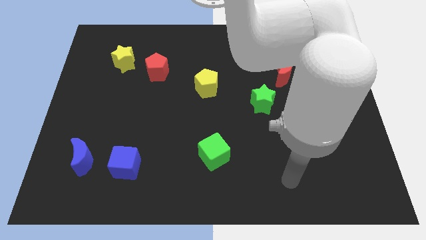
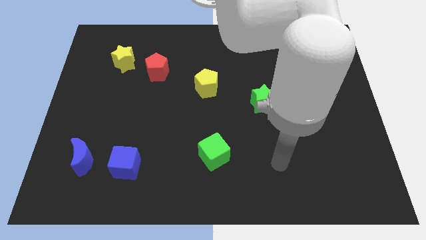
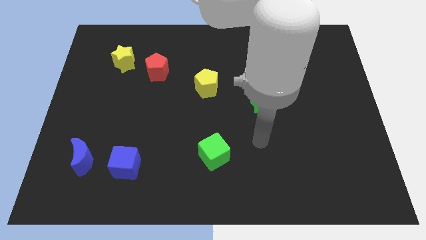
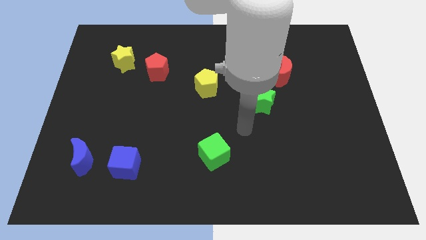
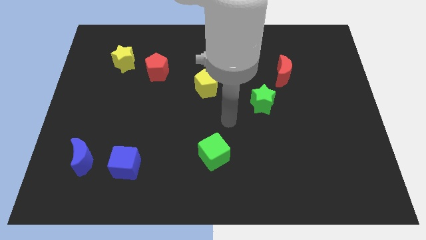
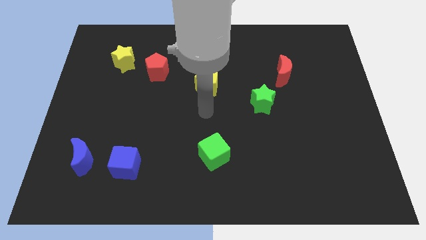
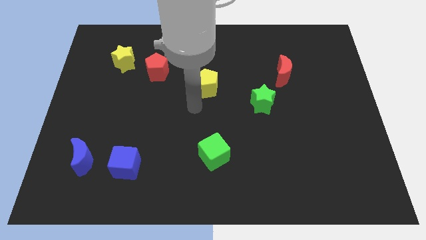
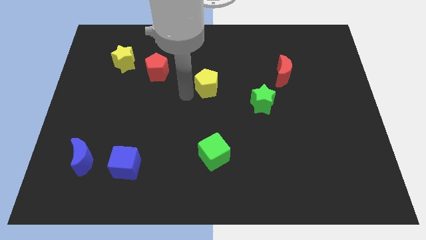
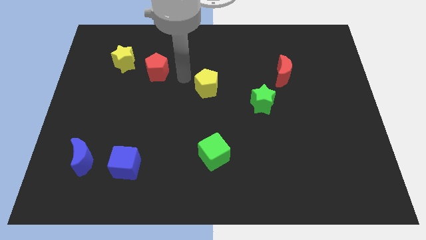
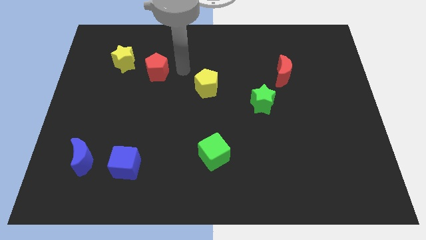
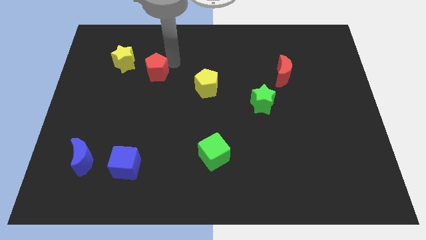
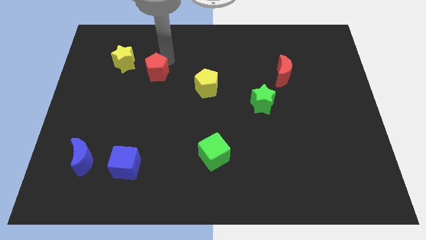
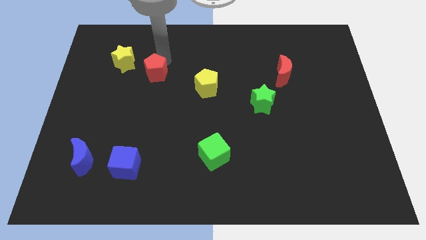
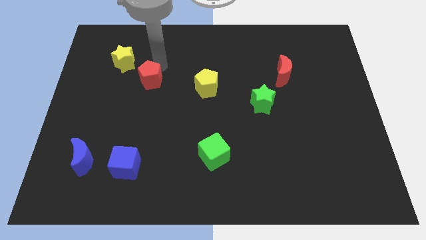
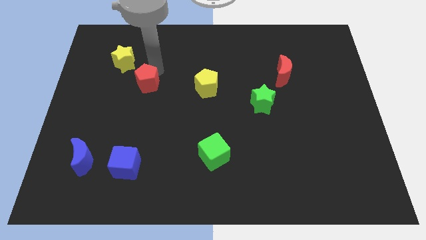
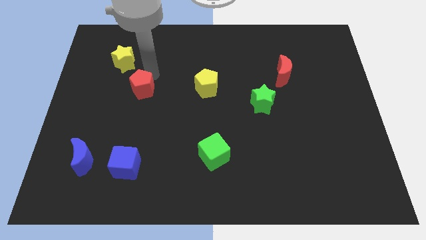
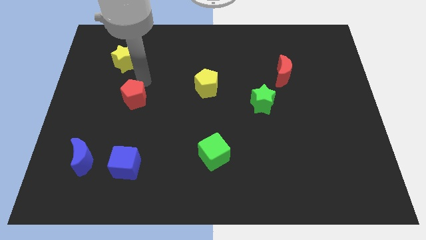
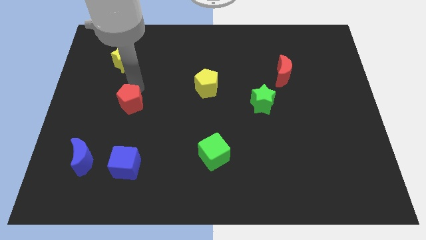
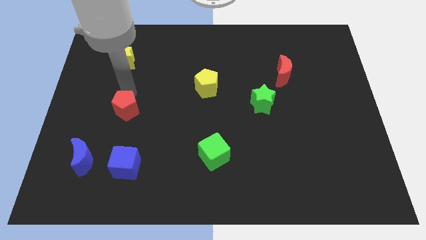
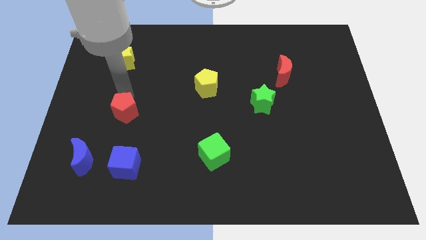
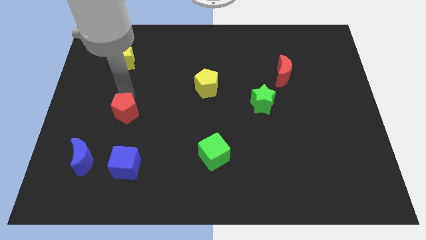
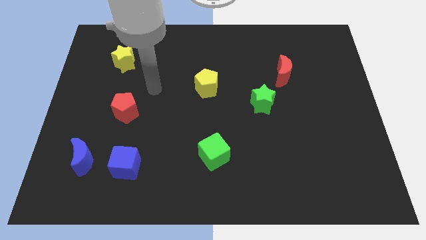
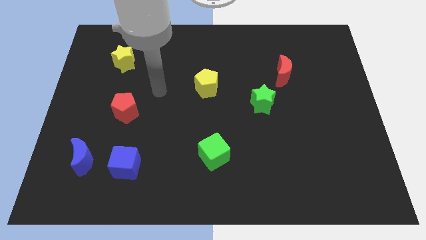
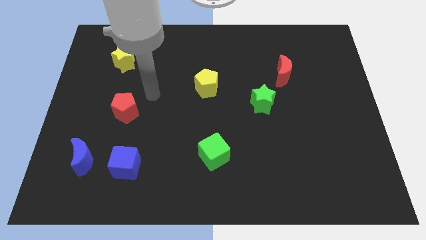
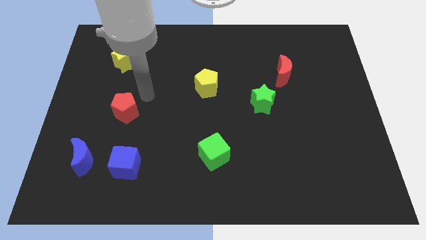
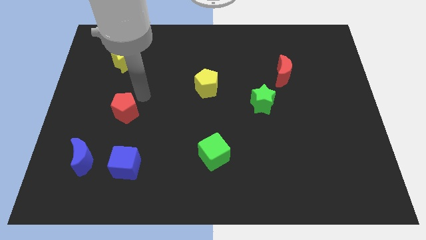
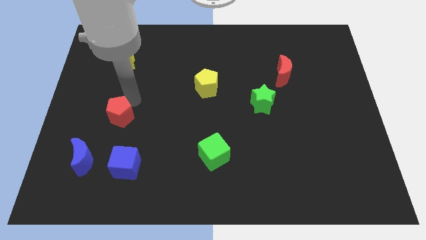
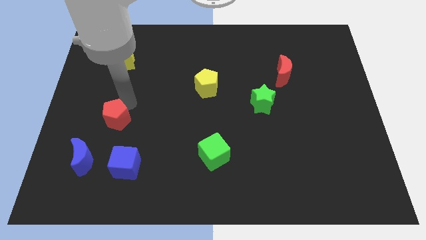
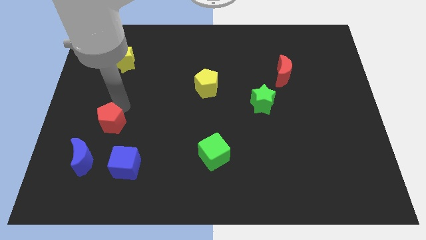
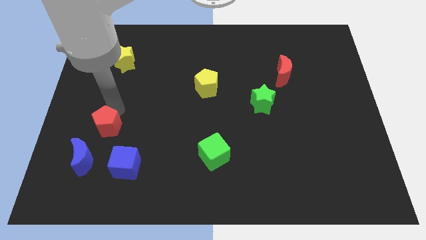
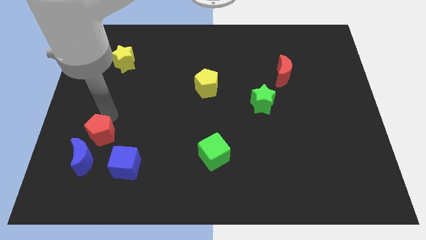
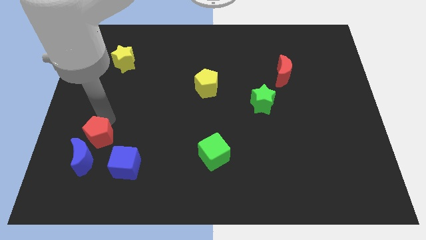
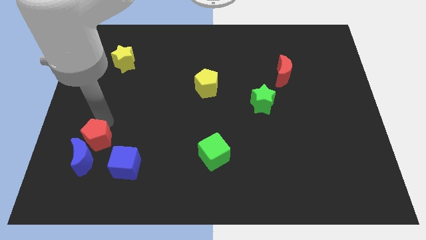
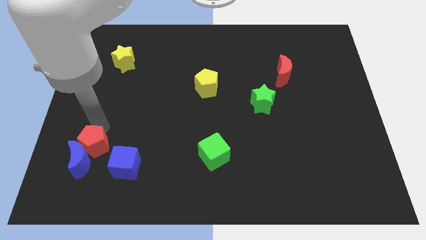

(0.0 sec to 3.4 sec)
push the red pentagon to the blue moon

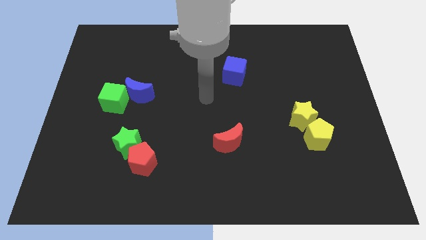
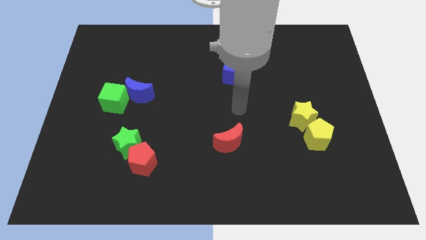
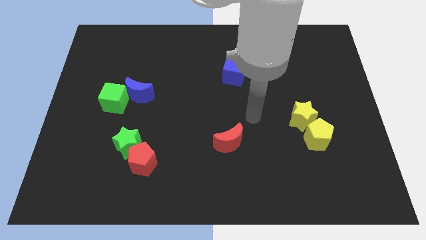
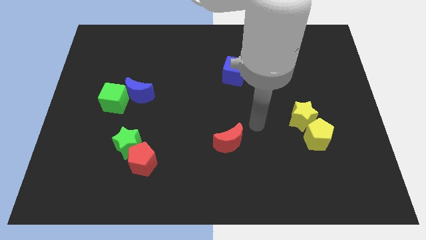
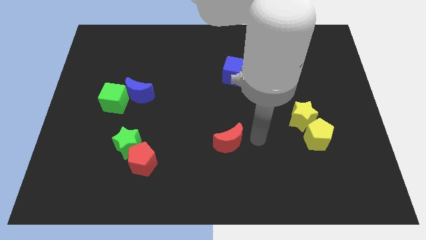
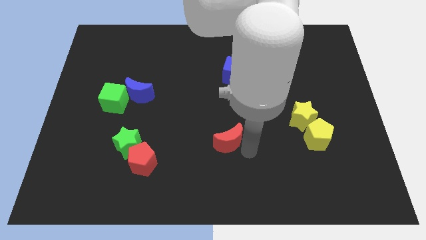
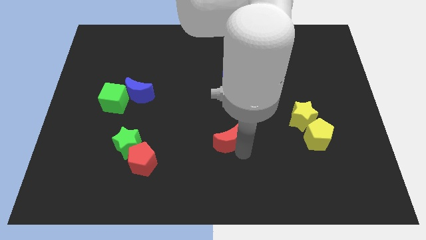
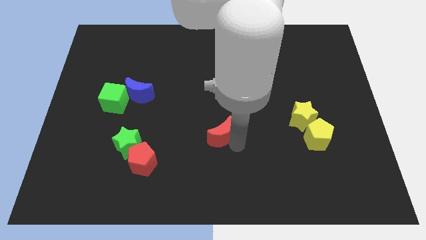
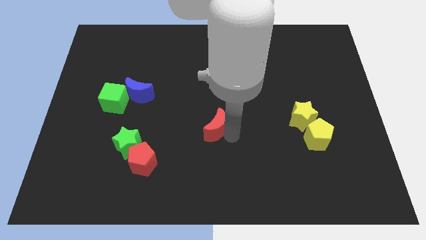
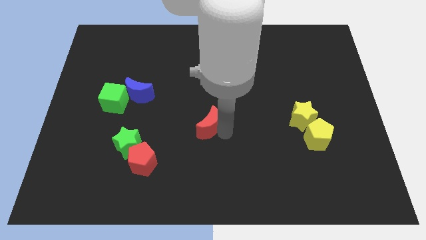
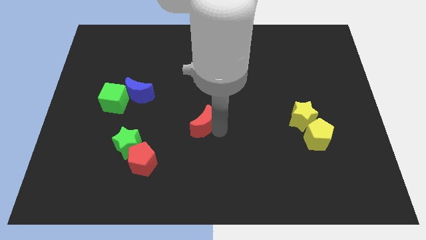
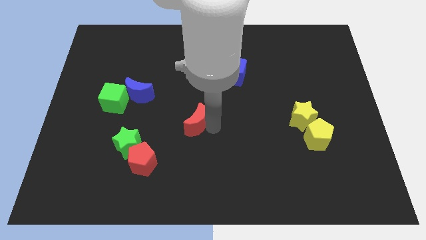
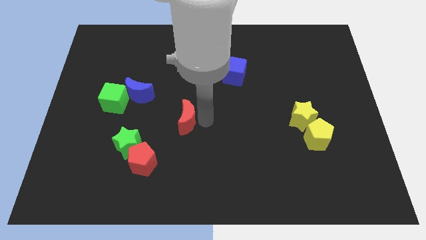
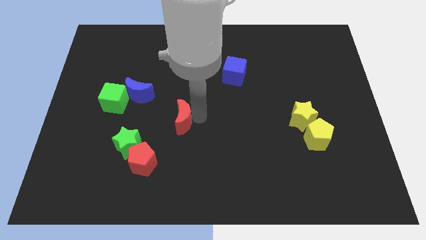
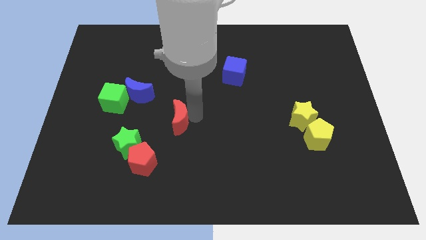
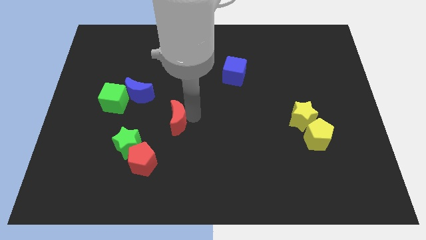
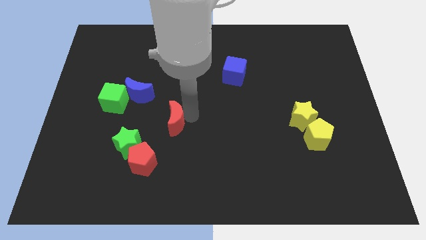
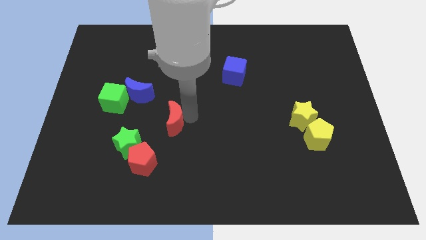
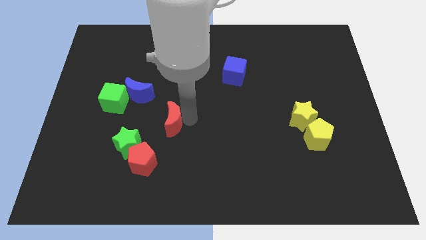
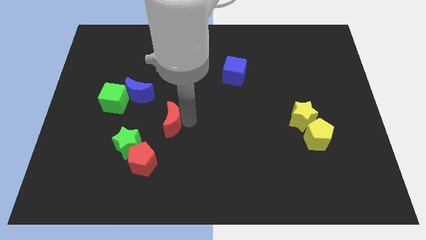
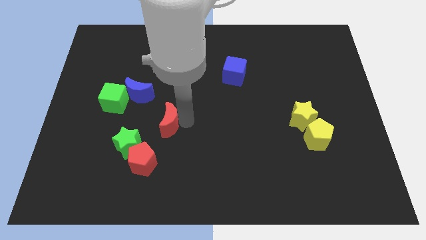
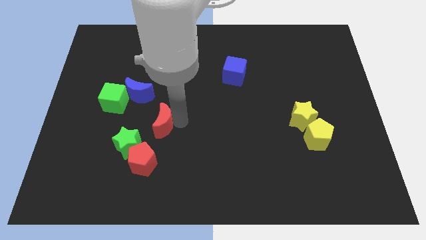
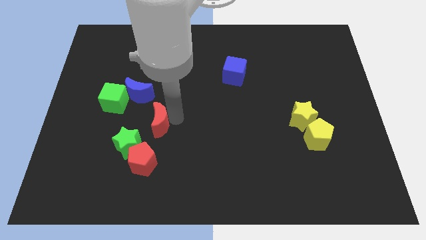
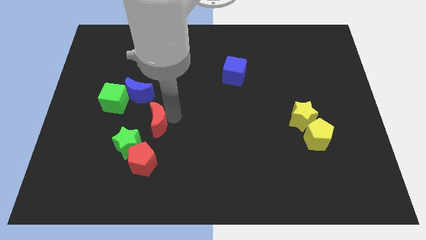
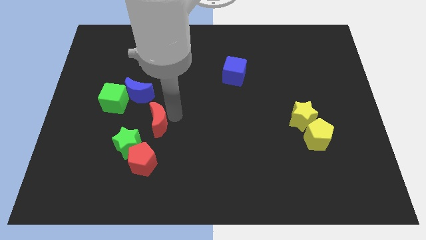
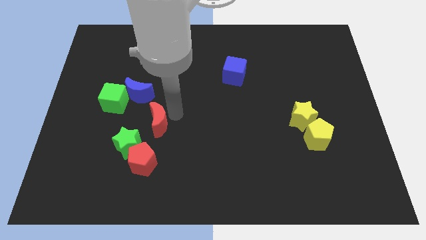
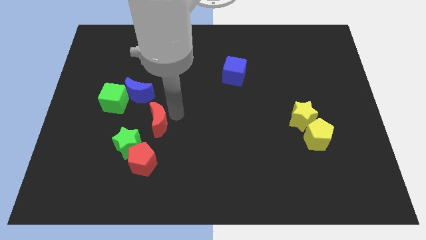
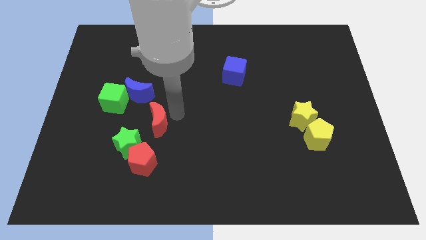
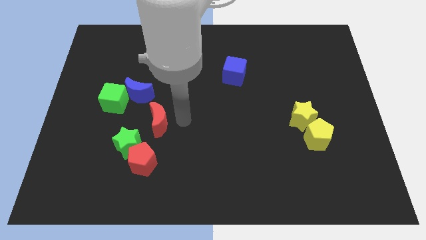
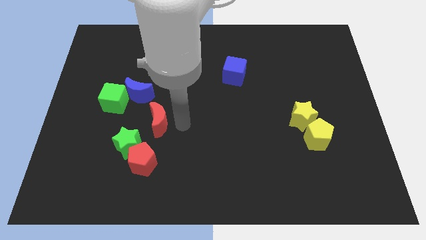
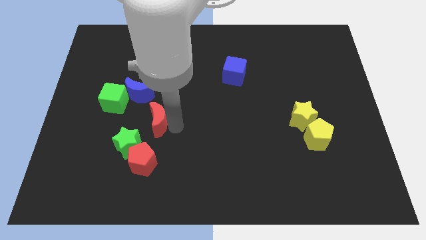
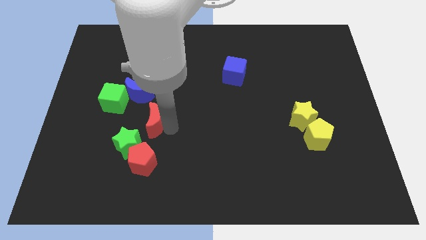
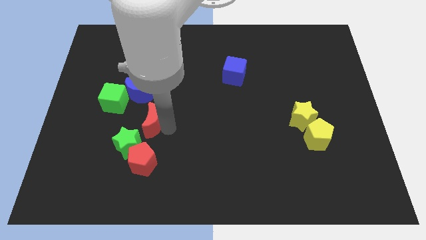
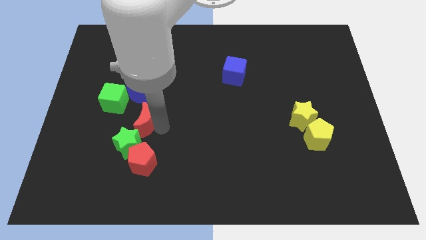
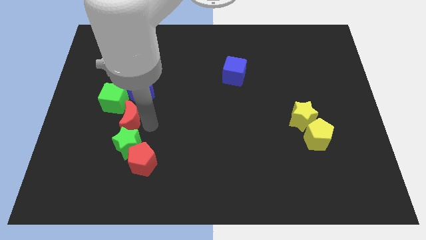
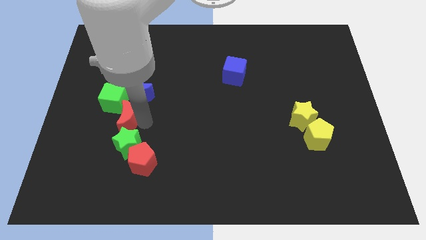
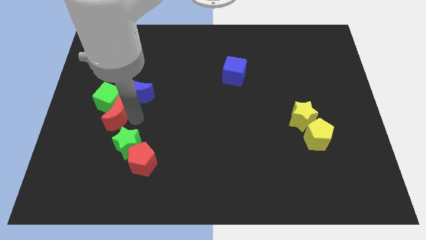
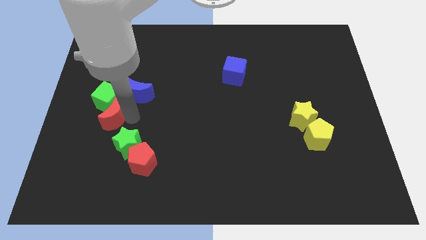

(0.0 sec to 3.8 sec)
put the red moon next to the green cube

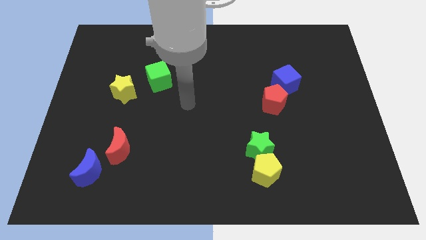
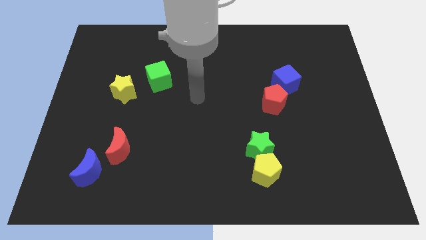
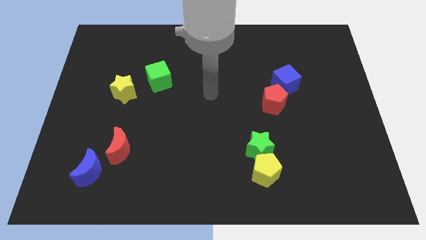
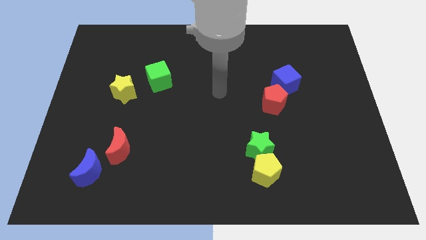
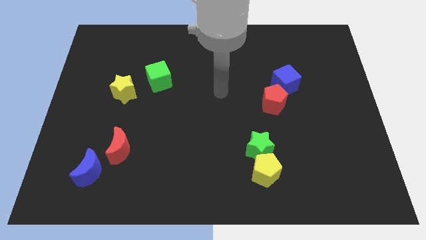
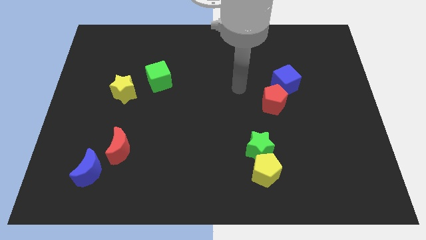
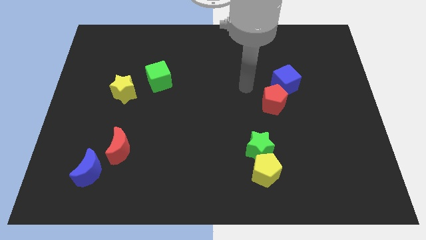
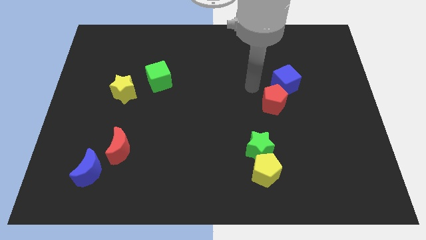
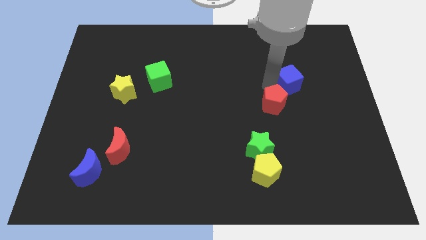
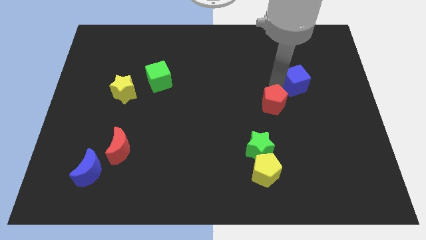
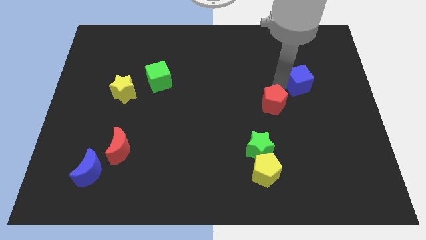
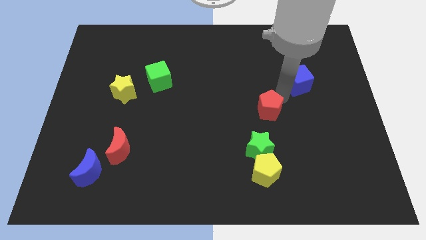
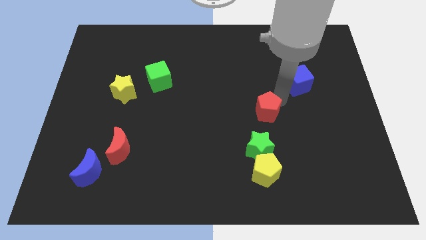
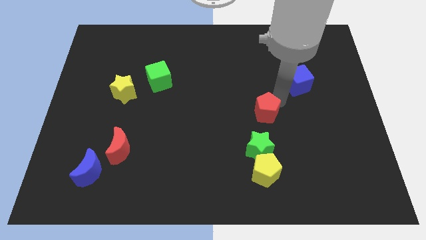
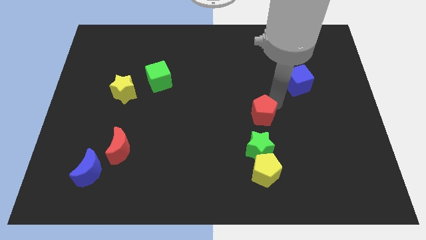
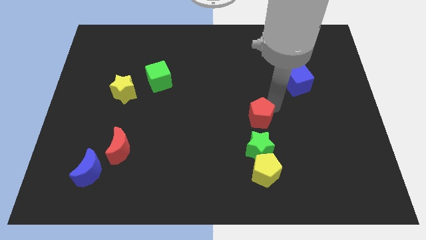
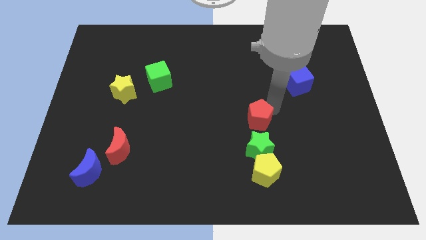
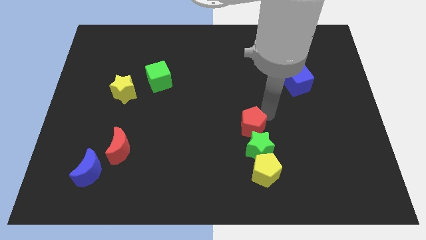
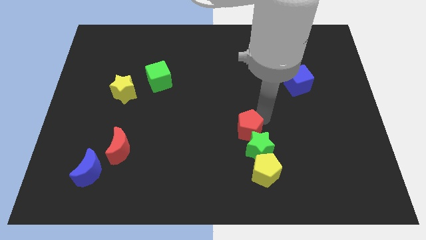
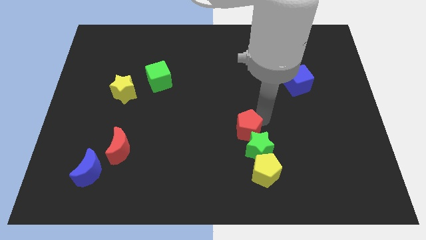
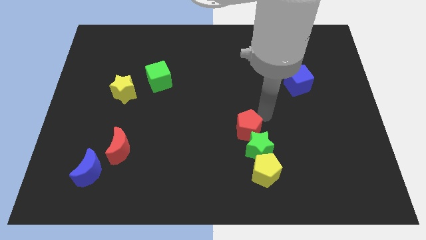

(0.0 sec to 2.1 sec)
push the red pentagon towards the green star
